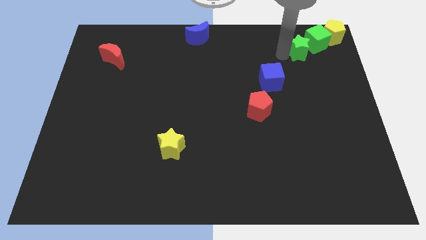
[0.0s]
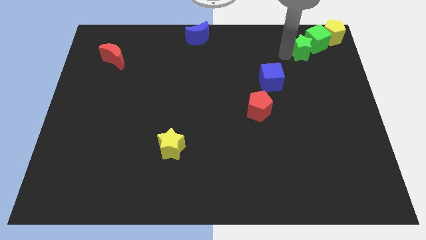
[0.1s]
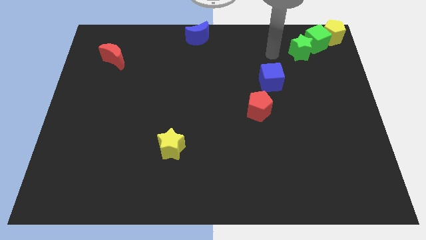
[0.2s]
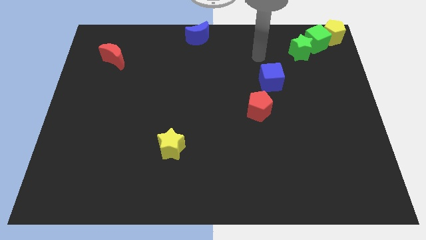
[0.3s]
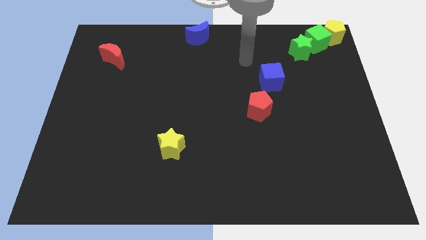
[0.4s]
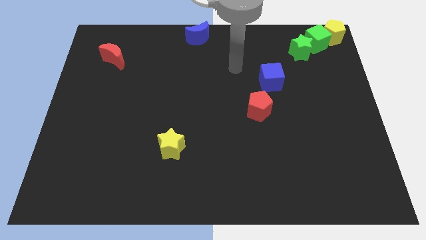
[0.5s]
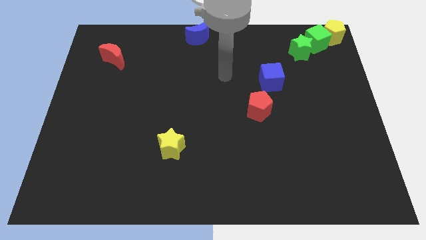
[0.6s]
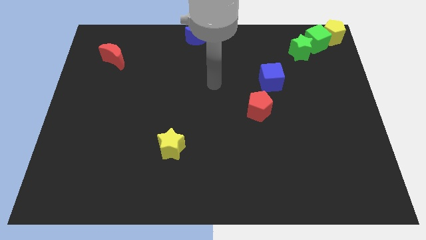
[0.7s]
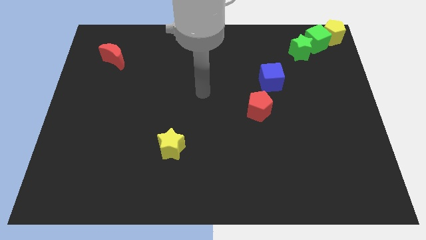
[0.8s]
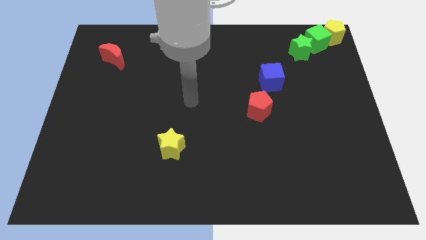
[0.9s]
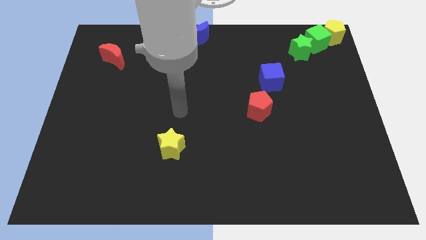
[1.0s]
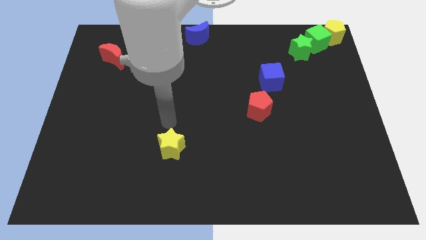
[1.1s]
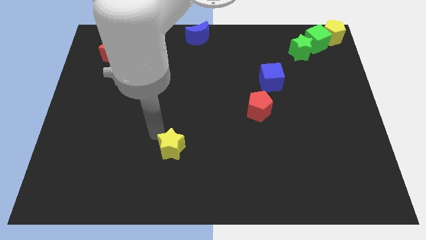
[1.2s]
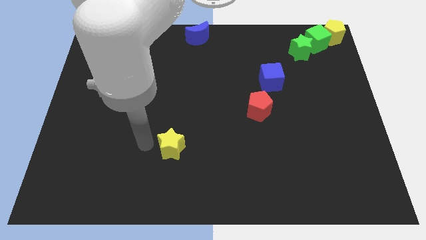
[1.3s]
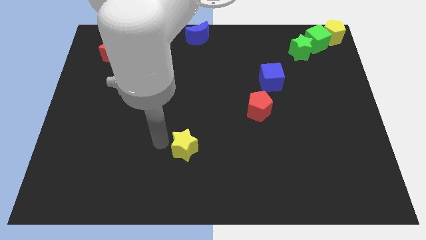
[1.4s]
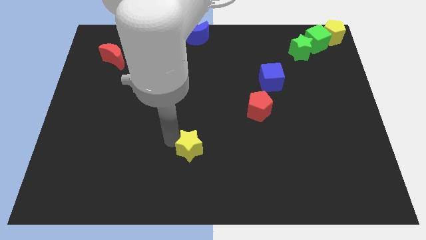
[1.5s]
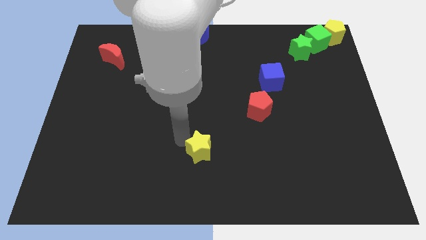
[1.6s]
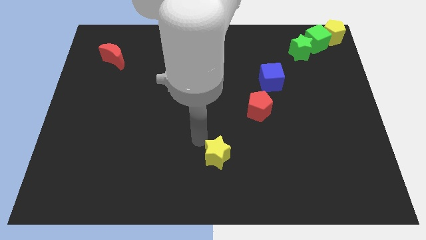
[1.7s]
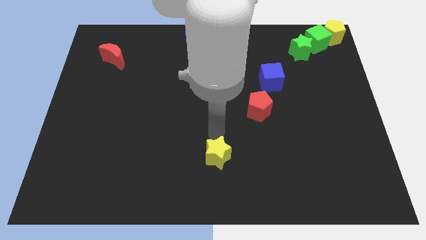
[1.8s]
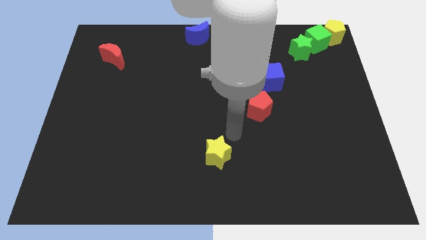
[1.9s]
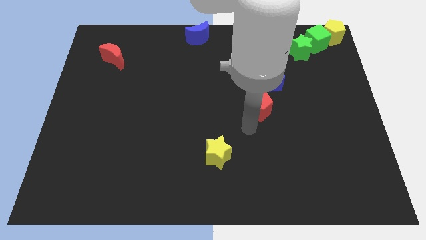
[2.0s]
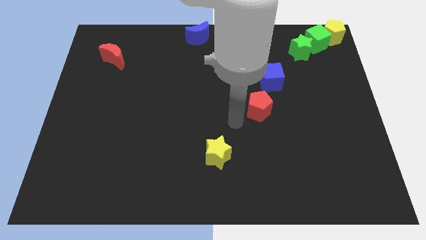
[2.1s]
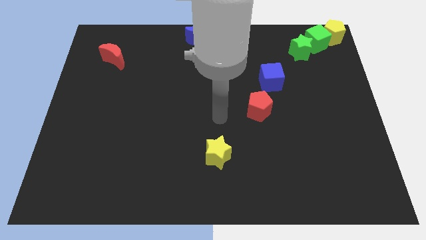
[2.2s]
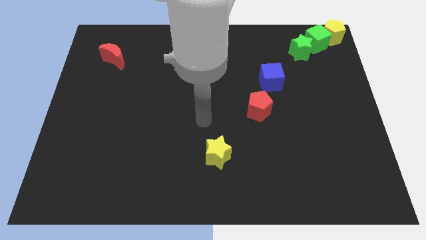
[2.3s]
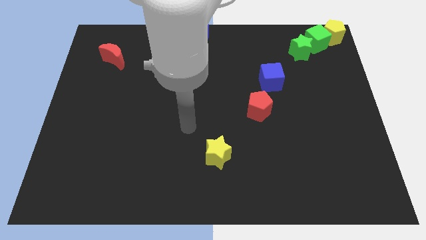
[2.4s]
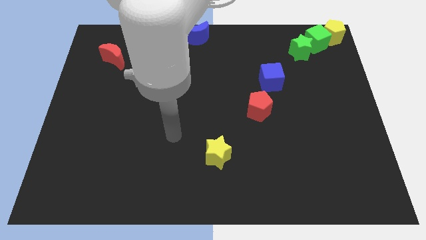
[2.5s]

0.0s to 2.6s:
push the yellow star slightly towards the right

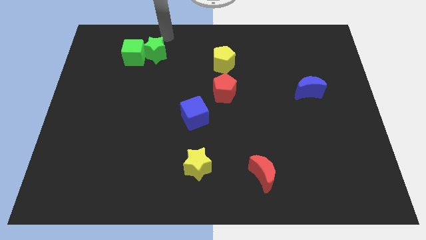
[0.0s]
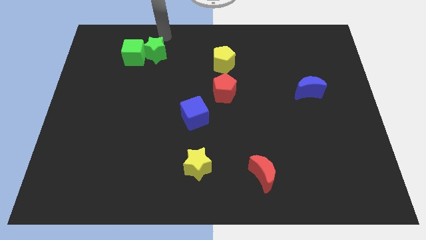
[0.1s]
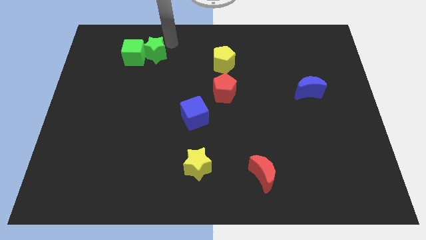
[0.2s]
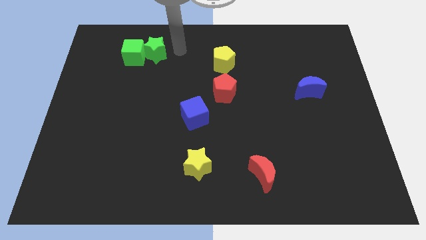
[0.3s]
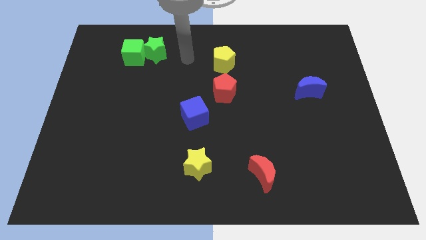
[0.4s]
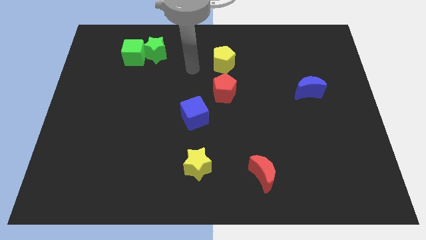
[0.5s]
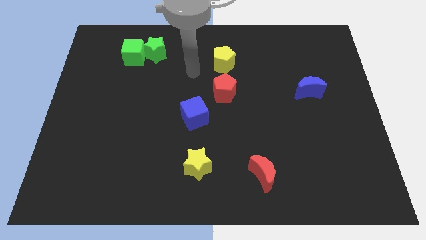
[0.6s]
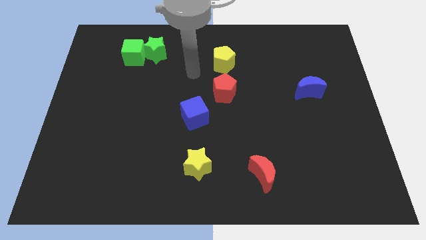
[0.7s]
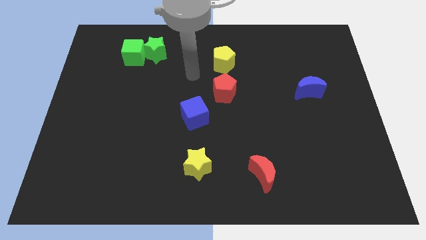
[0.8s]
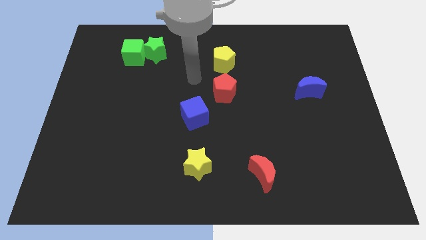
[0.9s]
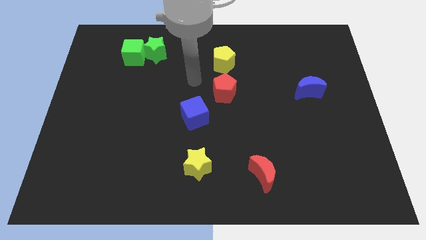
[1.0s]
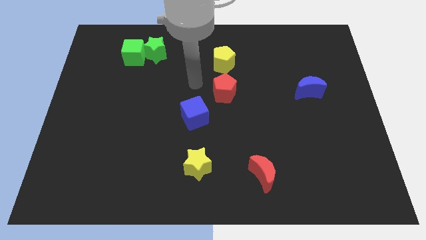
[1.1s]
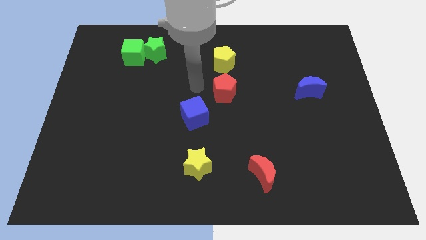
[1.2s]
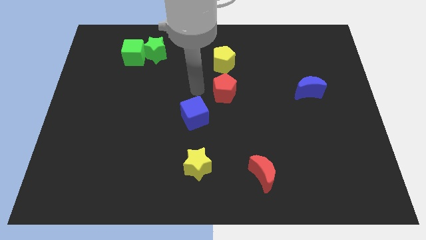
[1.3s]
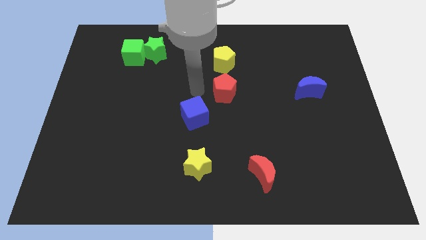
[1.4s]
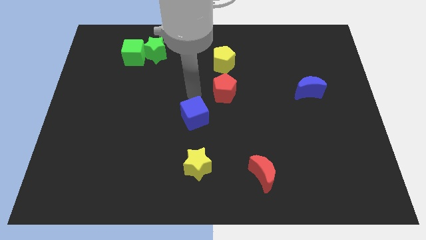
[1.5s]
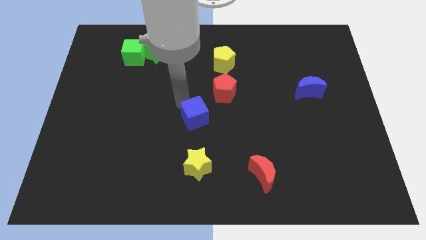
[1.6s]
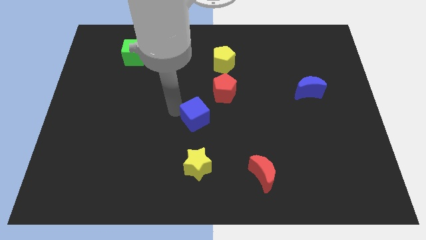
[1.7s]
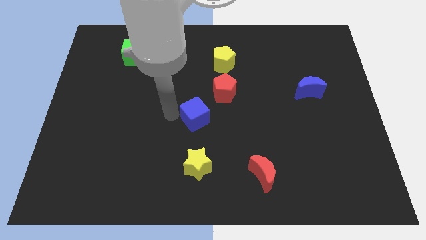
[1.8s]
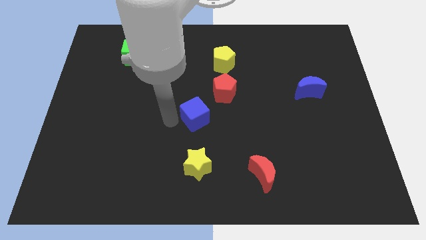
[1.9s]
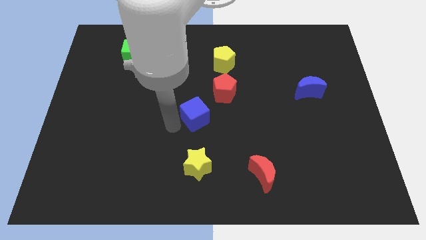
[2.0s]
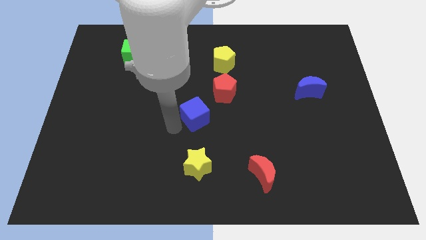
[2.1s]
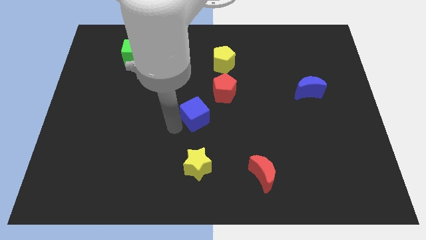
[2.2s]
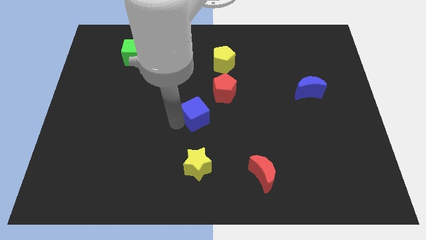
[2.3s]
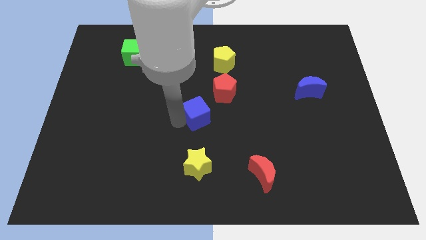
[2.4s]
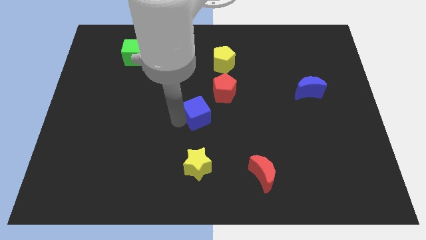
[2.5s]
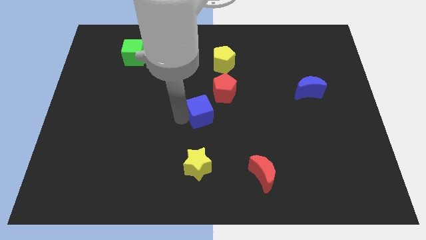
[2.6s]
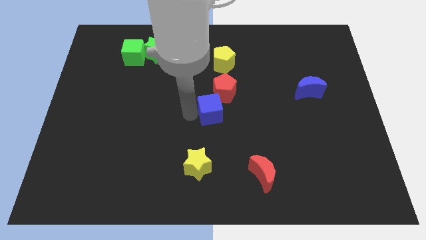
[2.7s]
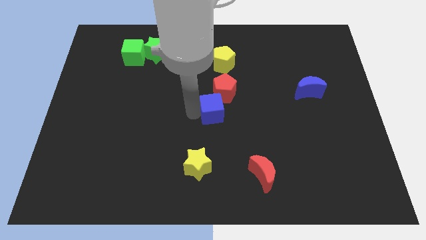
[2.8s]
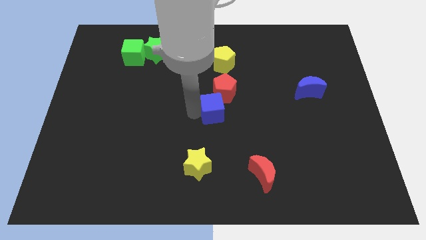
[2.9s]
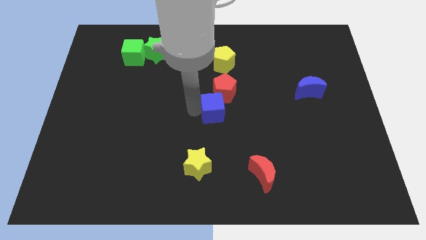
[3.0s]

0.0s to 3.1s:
move blue cube slightly into the red pentagon

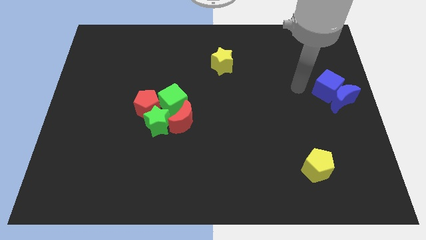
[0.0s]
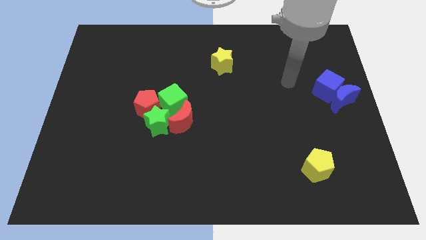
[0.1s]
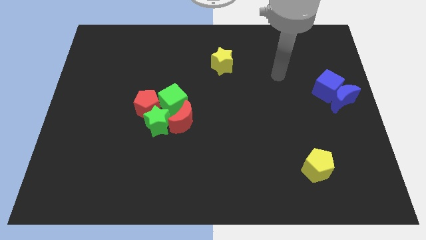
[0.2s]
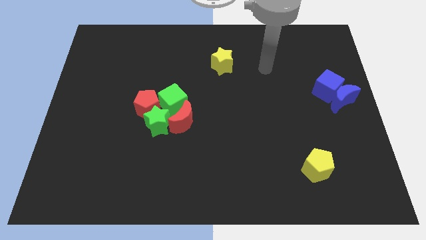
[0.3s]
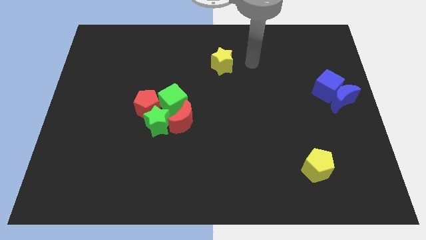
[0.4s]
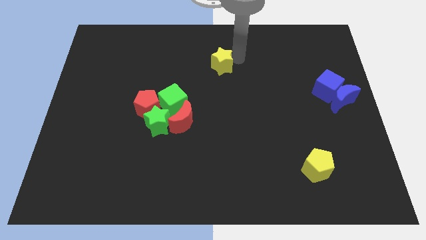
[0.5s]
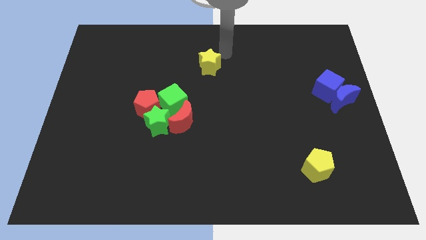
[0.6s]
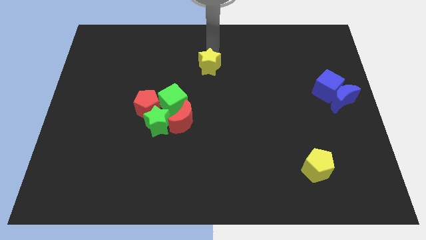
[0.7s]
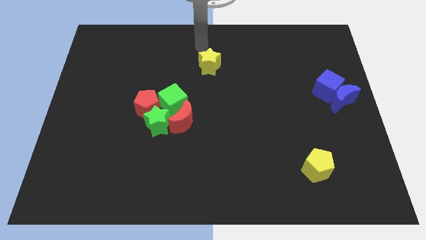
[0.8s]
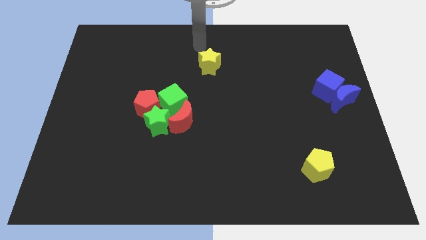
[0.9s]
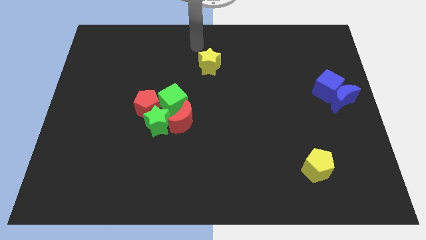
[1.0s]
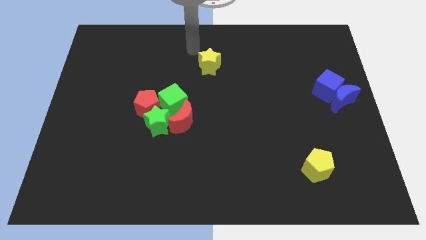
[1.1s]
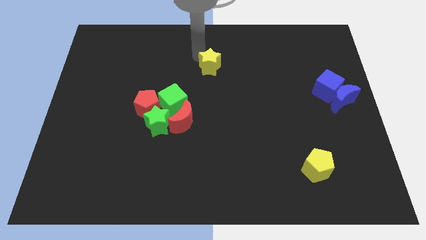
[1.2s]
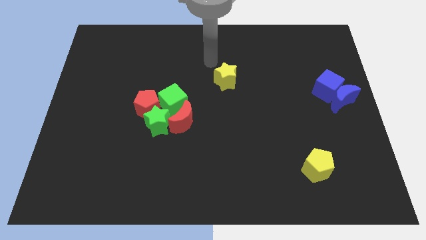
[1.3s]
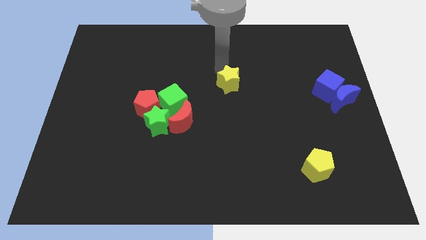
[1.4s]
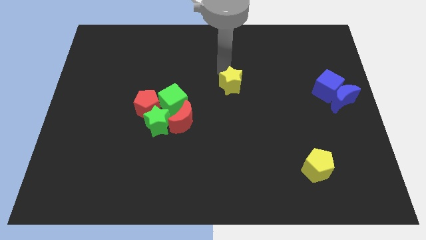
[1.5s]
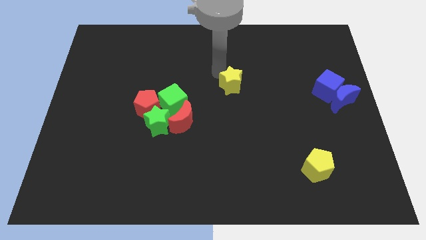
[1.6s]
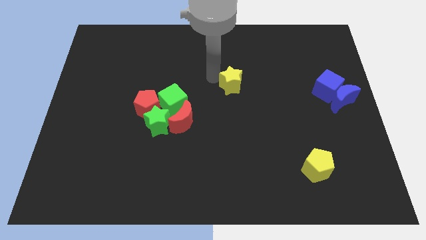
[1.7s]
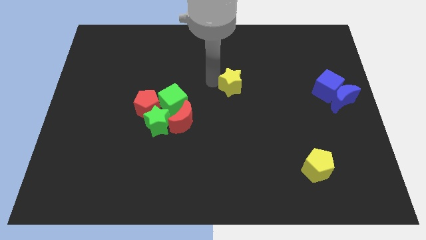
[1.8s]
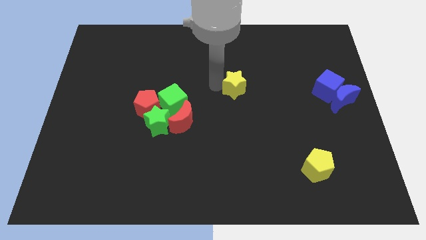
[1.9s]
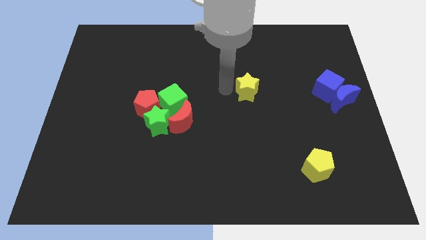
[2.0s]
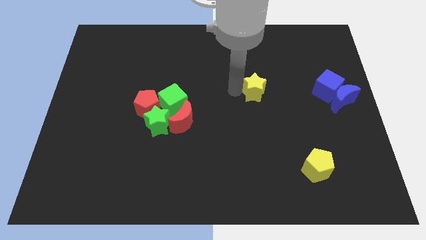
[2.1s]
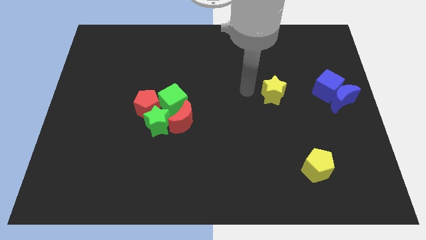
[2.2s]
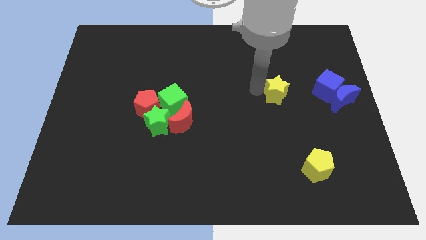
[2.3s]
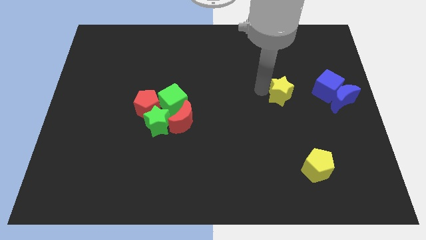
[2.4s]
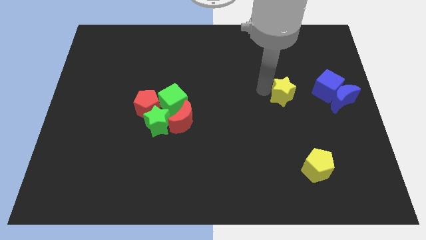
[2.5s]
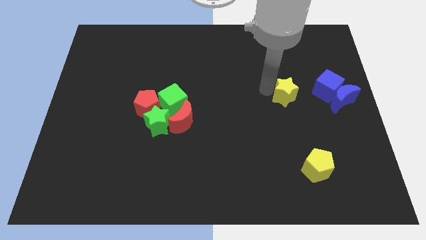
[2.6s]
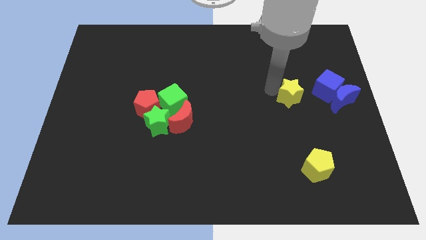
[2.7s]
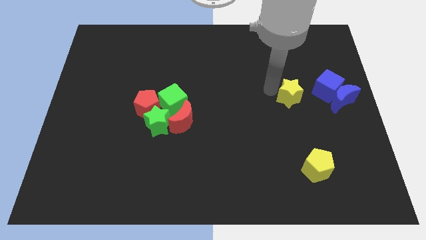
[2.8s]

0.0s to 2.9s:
push the yellow star towards the blue cube

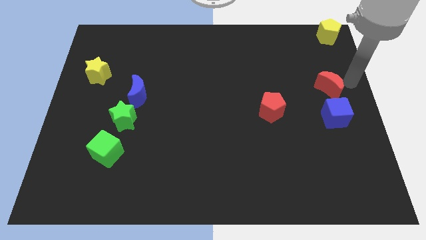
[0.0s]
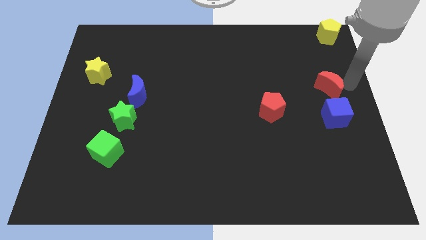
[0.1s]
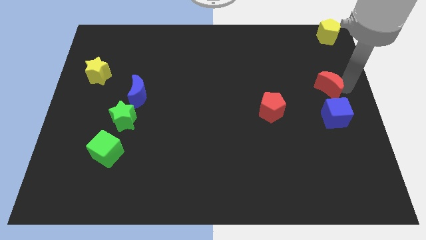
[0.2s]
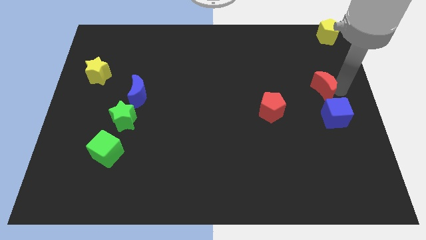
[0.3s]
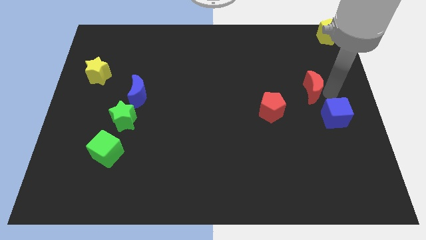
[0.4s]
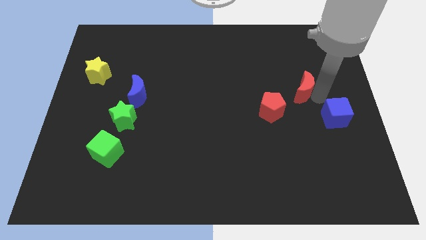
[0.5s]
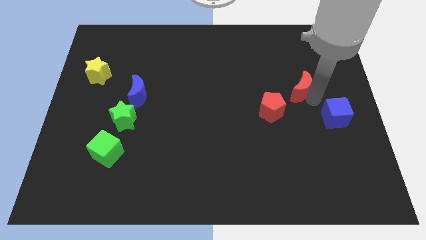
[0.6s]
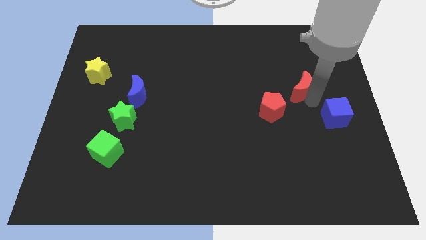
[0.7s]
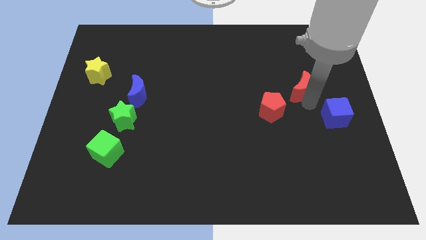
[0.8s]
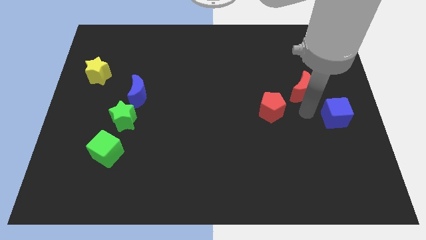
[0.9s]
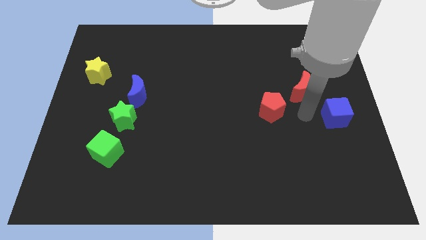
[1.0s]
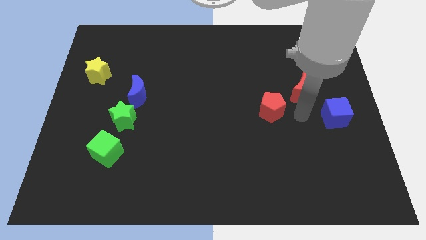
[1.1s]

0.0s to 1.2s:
separate the red moon and blue cube
